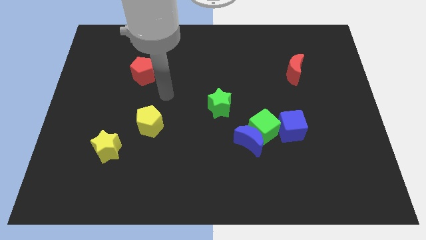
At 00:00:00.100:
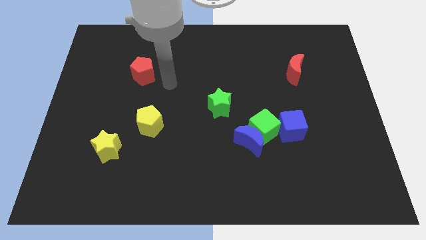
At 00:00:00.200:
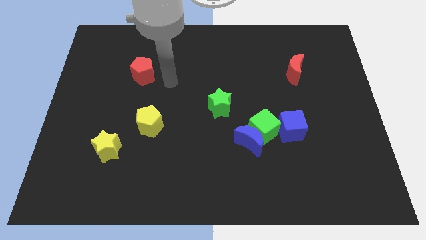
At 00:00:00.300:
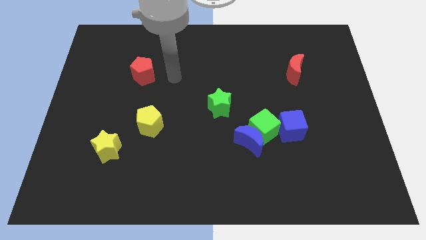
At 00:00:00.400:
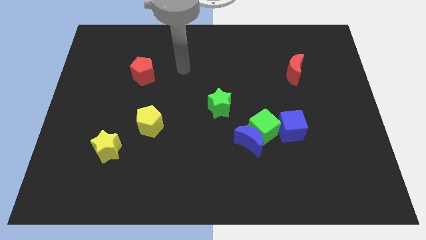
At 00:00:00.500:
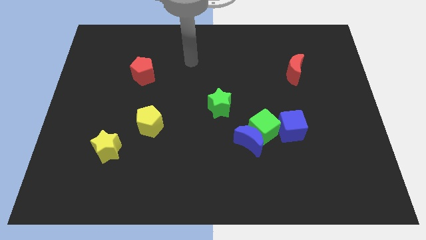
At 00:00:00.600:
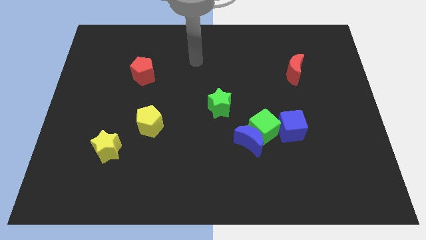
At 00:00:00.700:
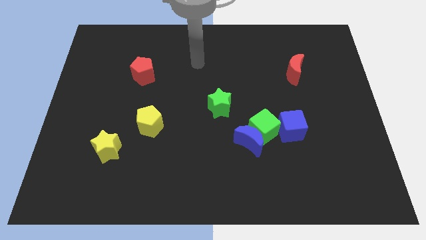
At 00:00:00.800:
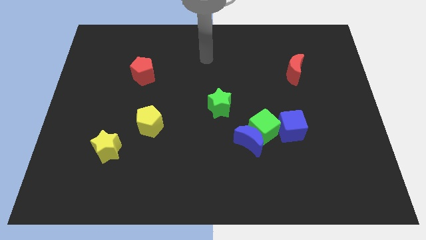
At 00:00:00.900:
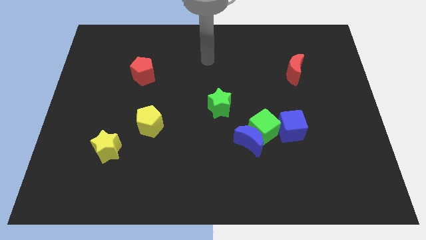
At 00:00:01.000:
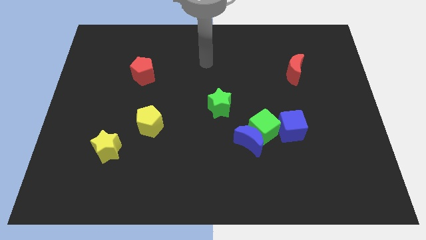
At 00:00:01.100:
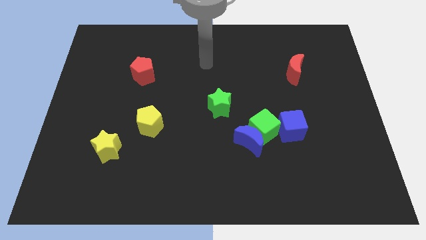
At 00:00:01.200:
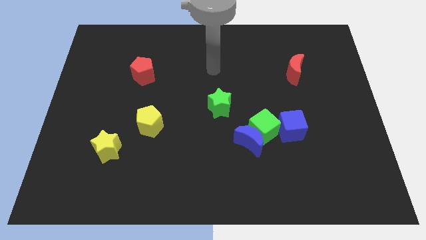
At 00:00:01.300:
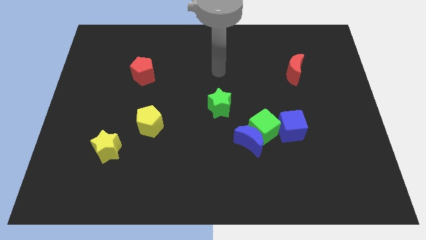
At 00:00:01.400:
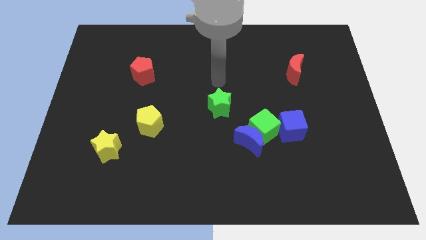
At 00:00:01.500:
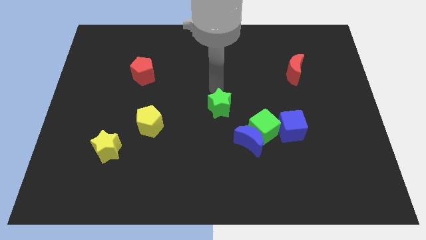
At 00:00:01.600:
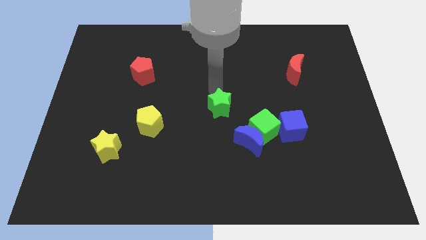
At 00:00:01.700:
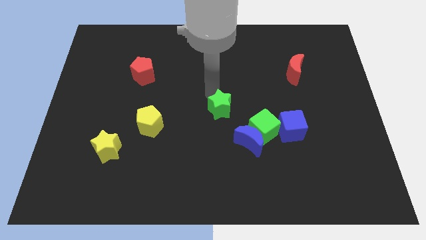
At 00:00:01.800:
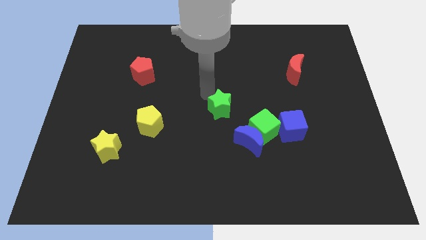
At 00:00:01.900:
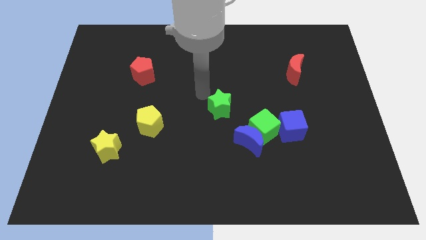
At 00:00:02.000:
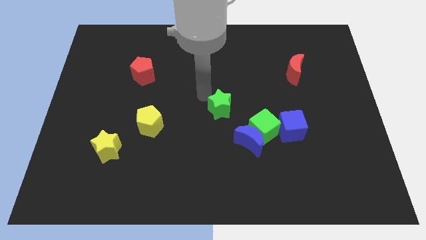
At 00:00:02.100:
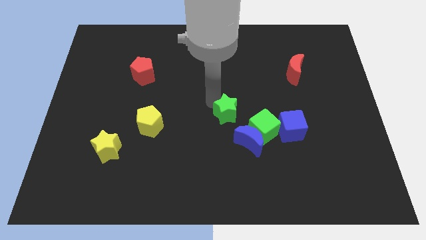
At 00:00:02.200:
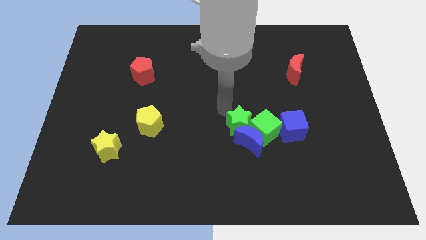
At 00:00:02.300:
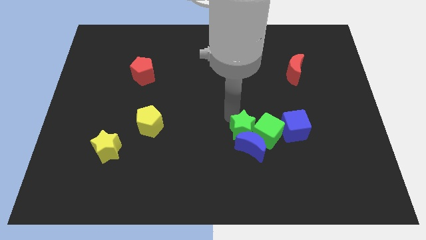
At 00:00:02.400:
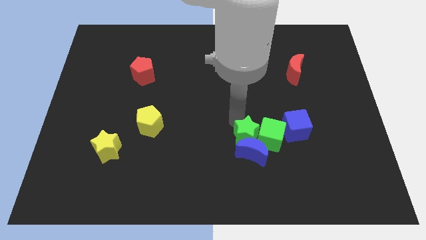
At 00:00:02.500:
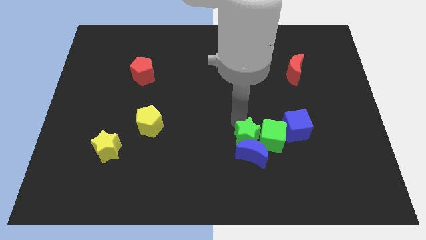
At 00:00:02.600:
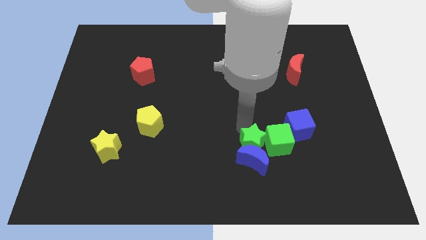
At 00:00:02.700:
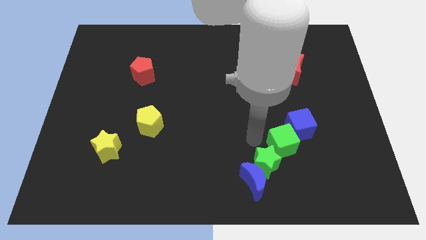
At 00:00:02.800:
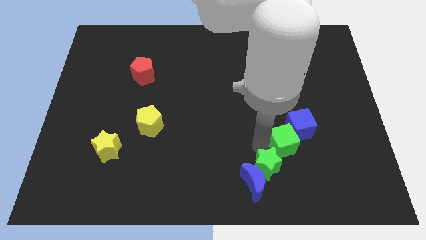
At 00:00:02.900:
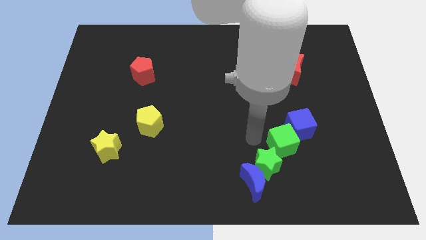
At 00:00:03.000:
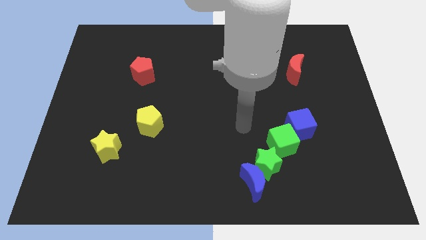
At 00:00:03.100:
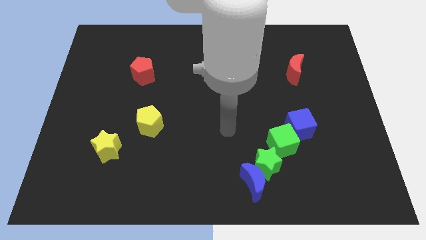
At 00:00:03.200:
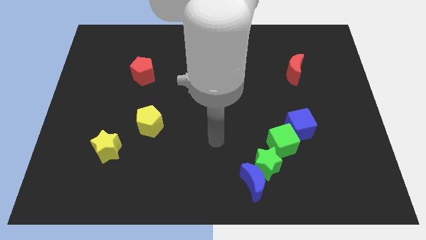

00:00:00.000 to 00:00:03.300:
place the green star in between the green cube and the blue moon

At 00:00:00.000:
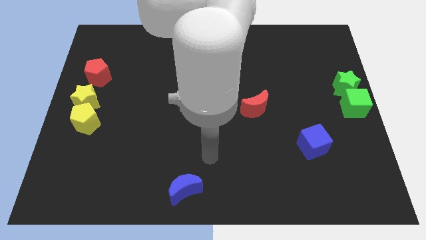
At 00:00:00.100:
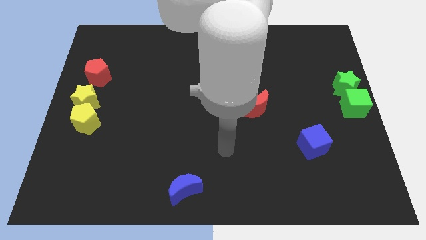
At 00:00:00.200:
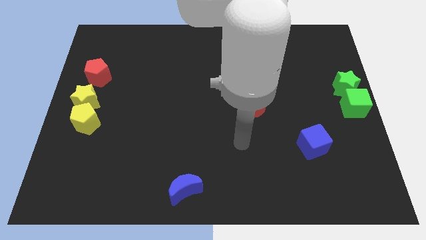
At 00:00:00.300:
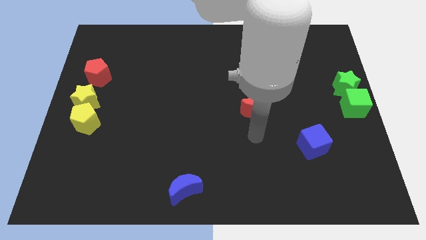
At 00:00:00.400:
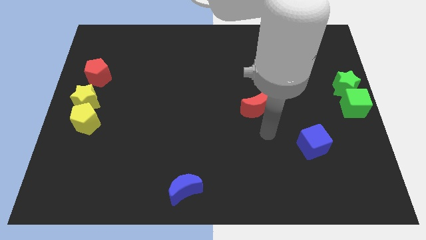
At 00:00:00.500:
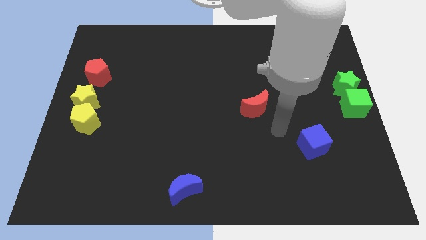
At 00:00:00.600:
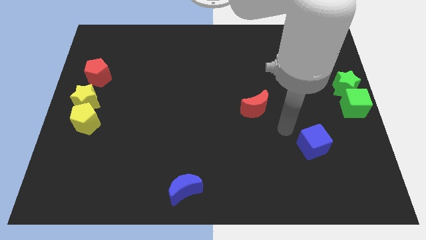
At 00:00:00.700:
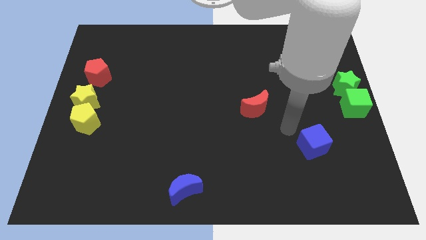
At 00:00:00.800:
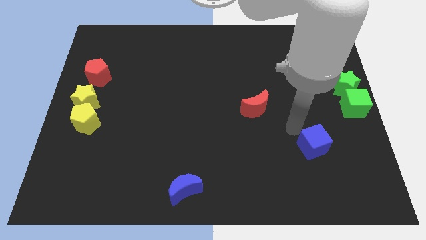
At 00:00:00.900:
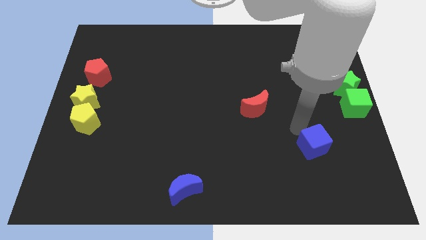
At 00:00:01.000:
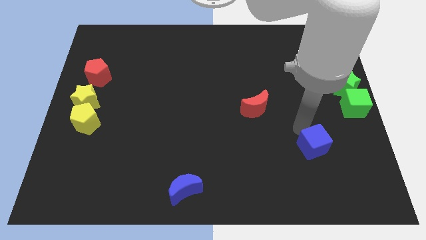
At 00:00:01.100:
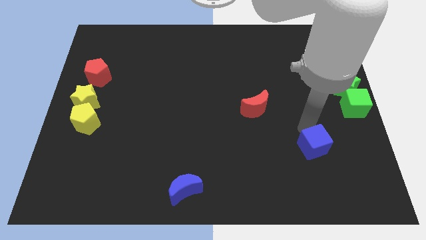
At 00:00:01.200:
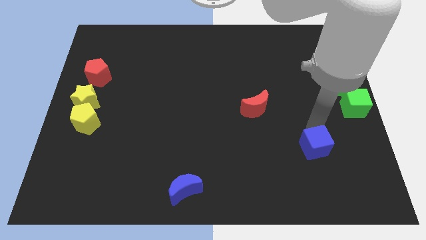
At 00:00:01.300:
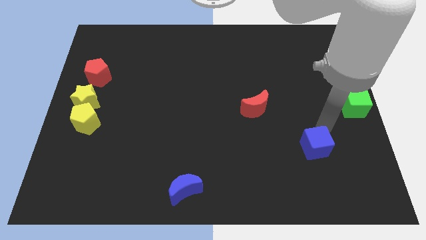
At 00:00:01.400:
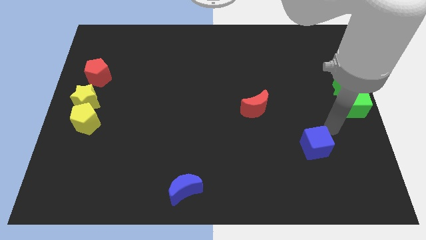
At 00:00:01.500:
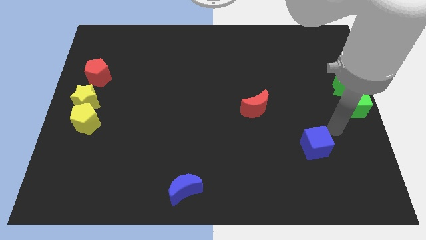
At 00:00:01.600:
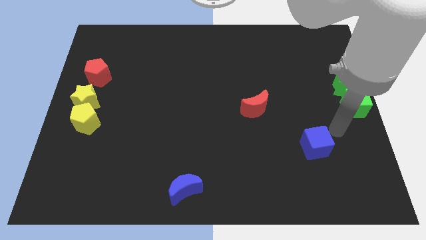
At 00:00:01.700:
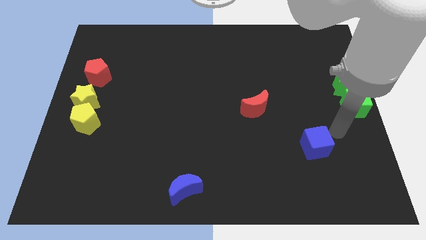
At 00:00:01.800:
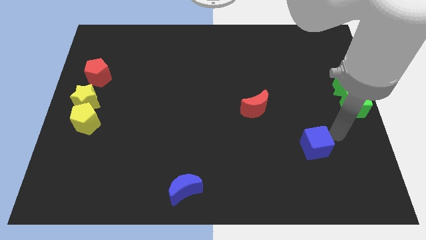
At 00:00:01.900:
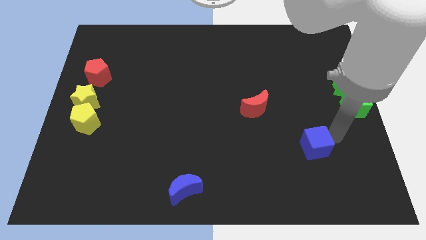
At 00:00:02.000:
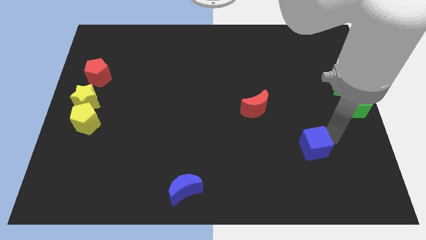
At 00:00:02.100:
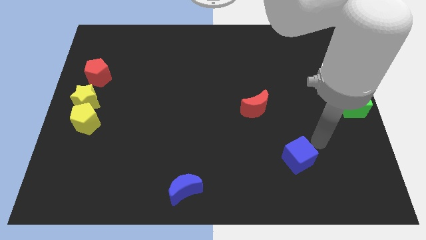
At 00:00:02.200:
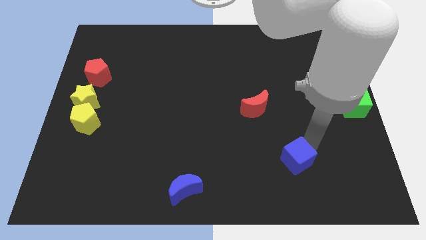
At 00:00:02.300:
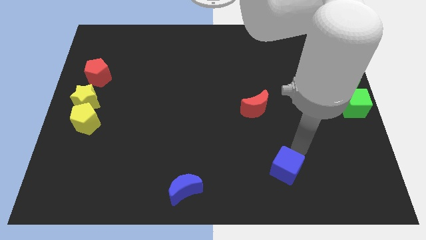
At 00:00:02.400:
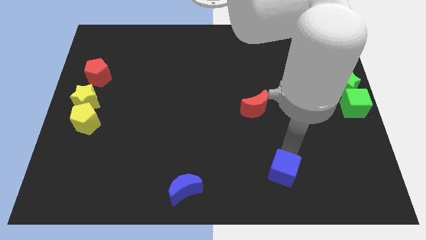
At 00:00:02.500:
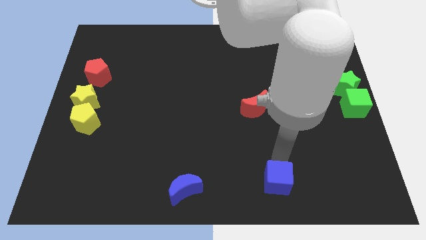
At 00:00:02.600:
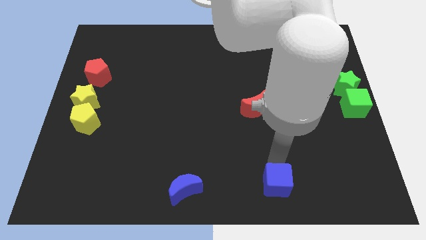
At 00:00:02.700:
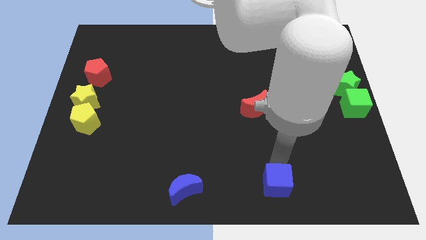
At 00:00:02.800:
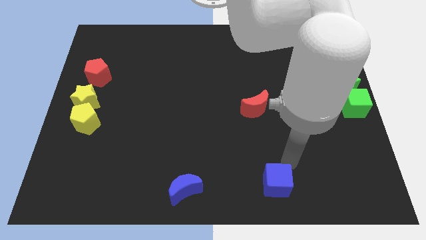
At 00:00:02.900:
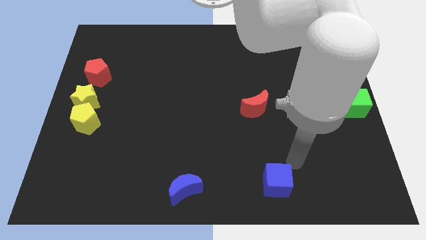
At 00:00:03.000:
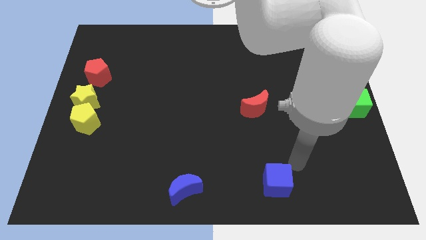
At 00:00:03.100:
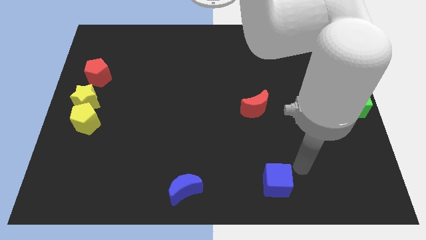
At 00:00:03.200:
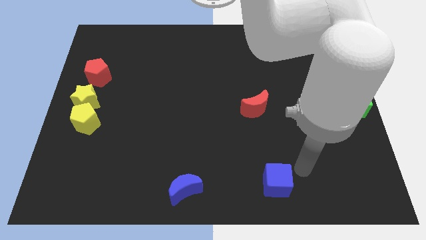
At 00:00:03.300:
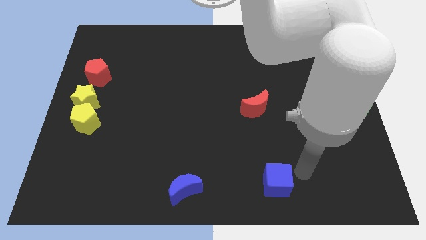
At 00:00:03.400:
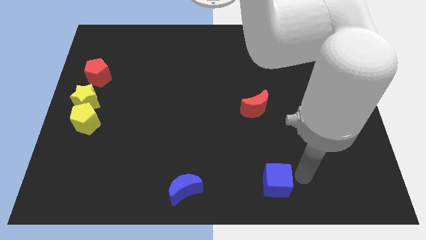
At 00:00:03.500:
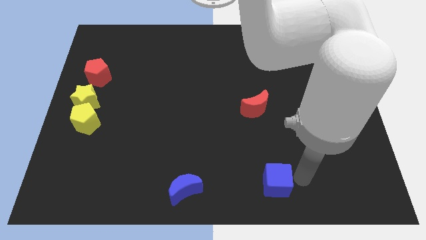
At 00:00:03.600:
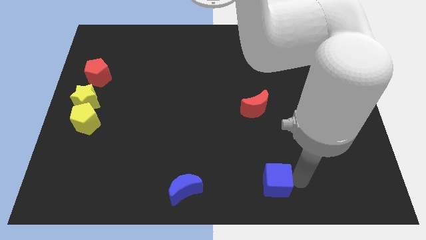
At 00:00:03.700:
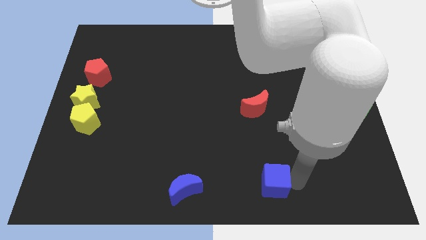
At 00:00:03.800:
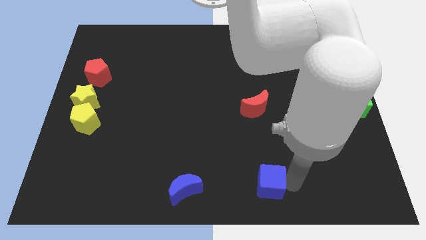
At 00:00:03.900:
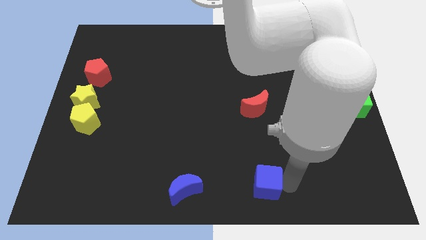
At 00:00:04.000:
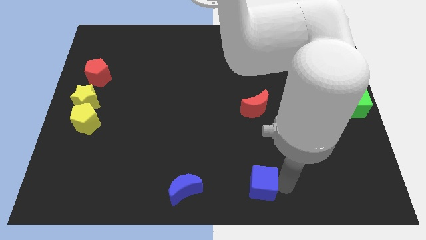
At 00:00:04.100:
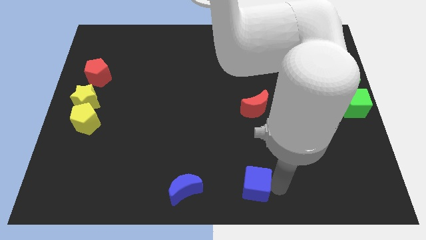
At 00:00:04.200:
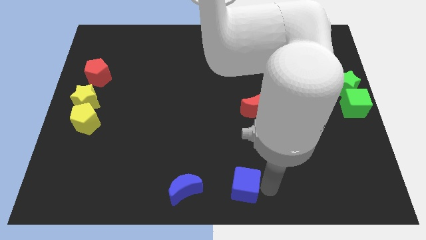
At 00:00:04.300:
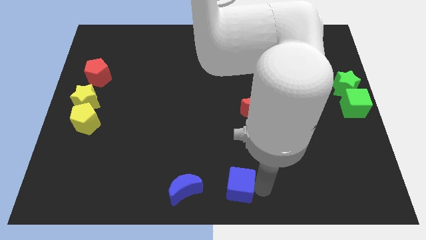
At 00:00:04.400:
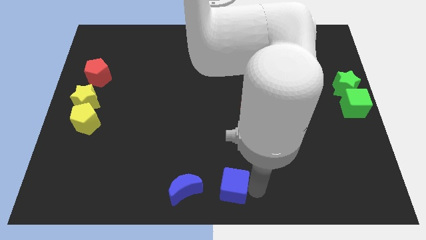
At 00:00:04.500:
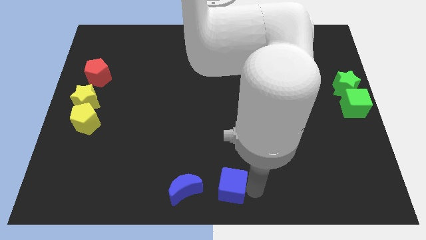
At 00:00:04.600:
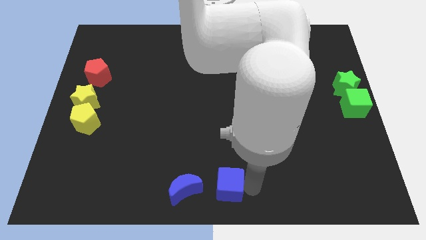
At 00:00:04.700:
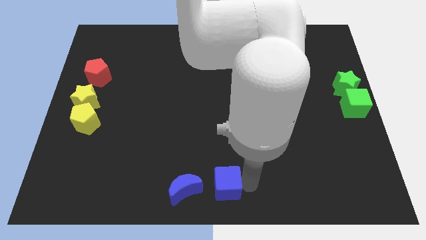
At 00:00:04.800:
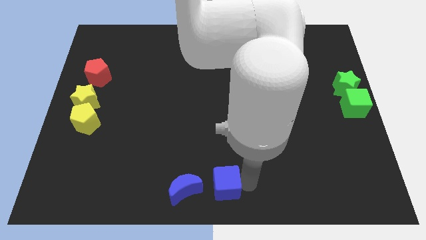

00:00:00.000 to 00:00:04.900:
push the blue cube to the right of the blue crescent

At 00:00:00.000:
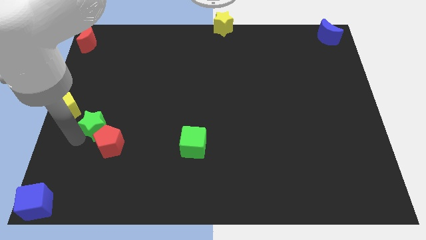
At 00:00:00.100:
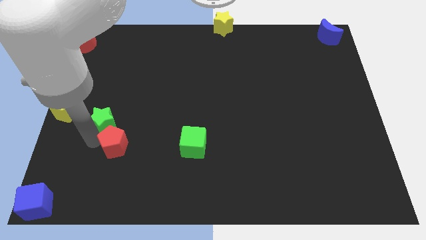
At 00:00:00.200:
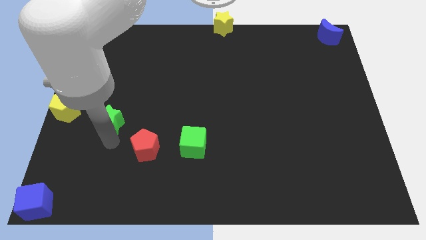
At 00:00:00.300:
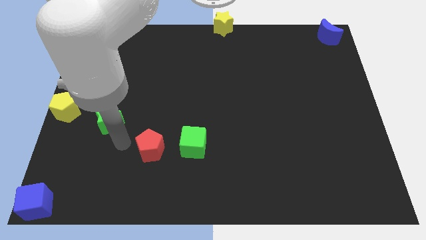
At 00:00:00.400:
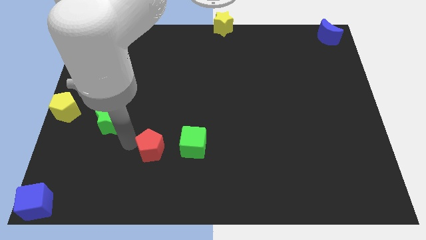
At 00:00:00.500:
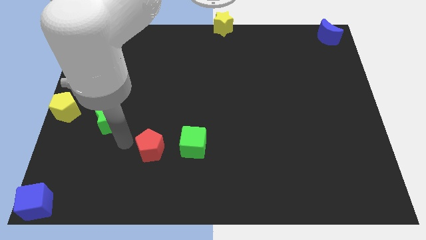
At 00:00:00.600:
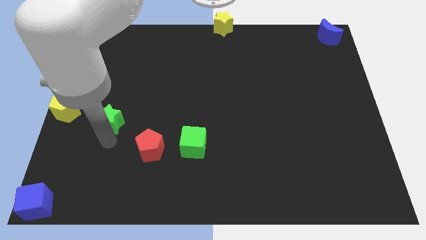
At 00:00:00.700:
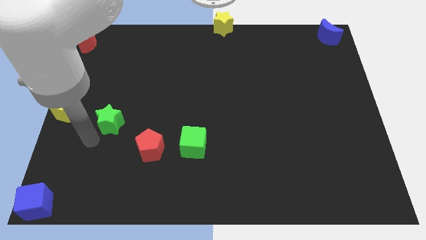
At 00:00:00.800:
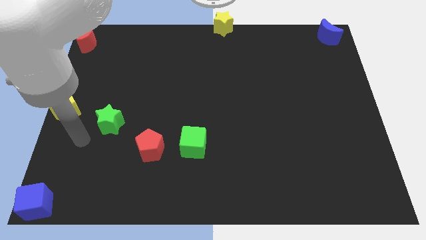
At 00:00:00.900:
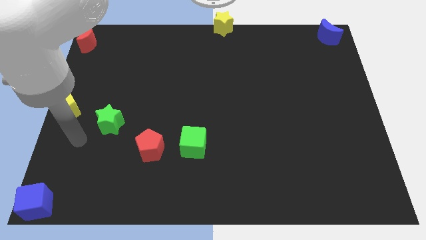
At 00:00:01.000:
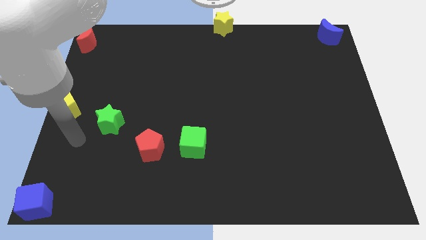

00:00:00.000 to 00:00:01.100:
push the red pentagon on the left side of the green cube
